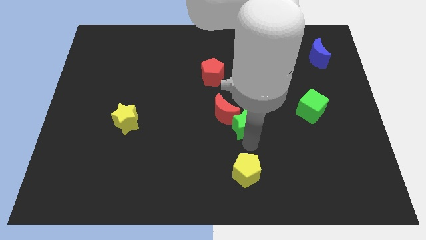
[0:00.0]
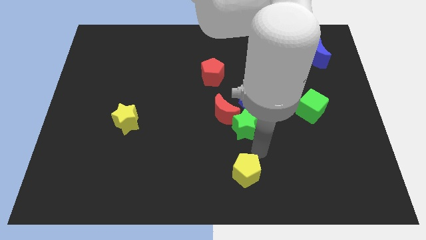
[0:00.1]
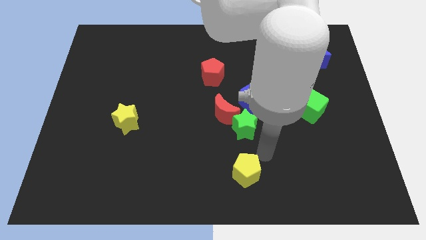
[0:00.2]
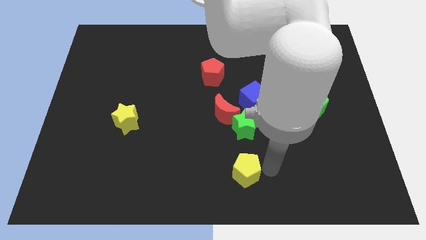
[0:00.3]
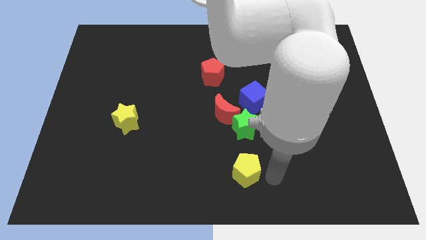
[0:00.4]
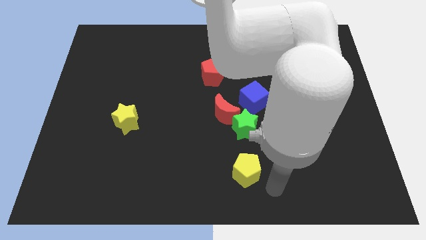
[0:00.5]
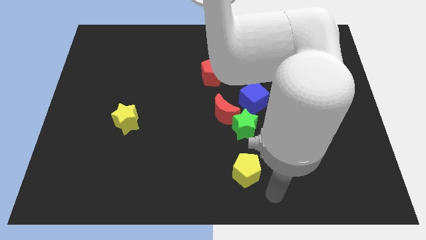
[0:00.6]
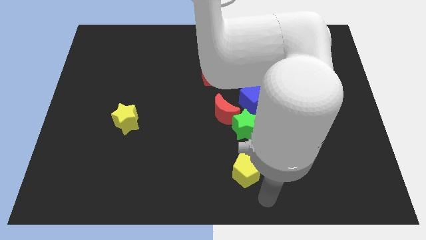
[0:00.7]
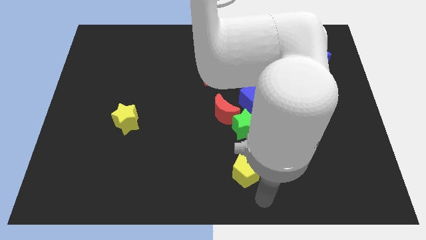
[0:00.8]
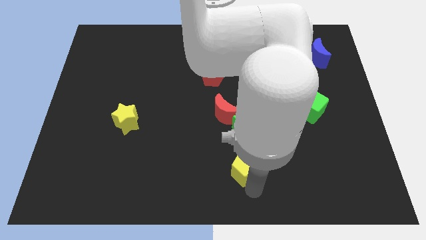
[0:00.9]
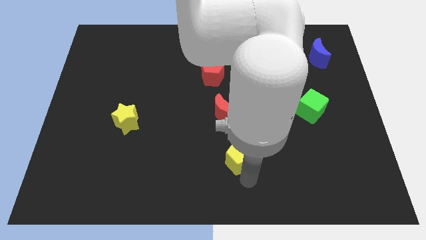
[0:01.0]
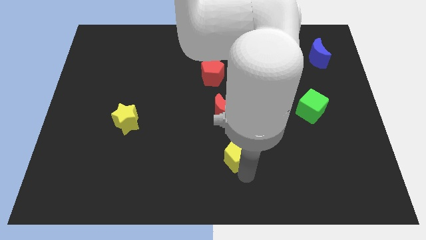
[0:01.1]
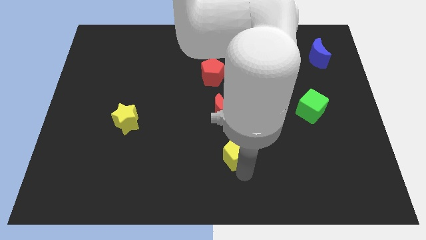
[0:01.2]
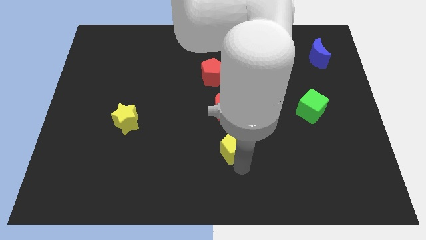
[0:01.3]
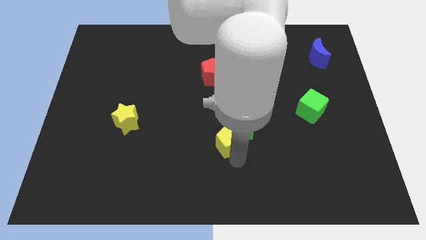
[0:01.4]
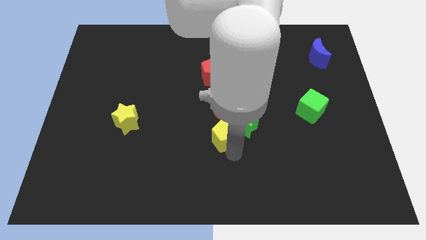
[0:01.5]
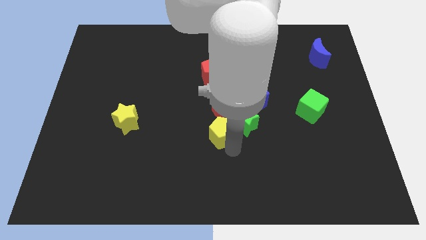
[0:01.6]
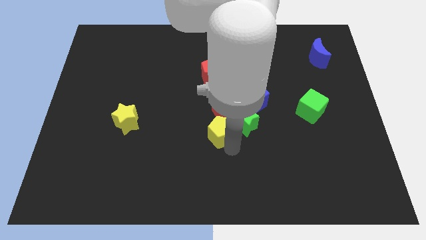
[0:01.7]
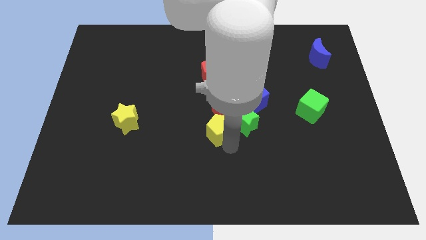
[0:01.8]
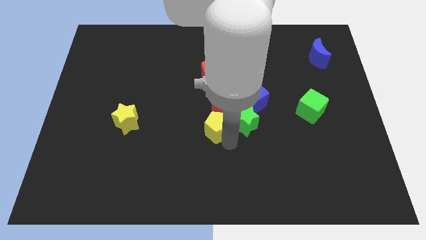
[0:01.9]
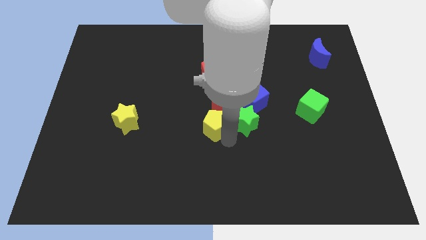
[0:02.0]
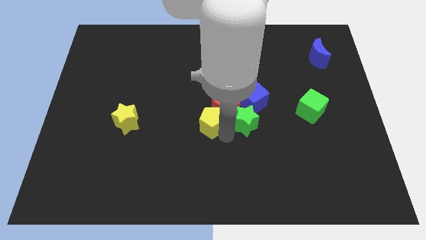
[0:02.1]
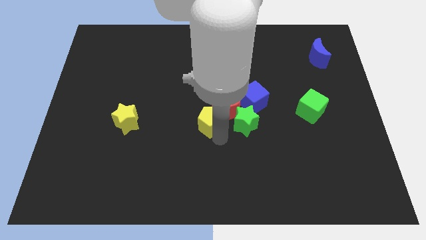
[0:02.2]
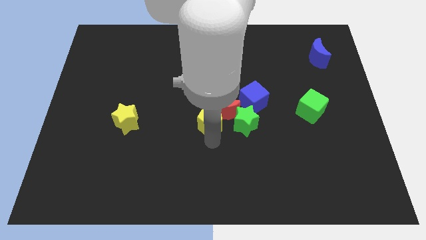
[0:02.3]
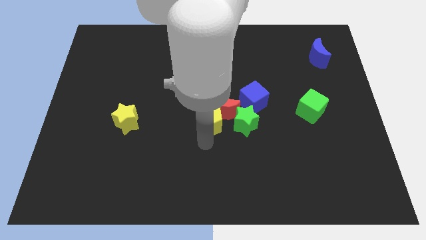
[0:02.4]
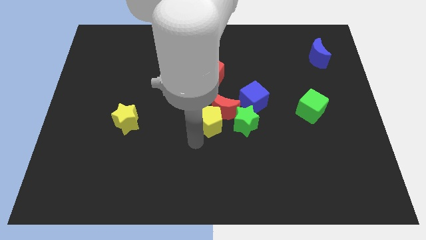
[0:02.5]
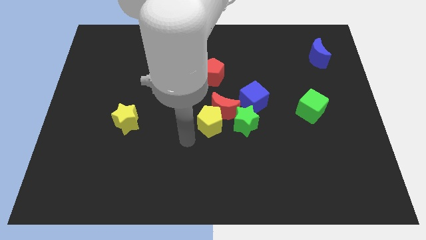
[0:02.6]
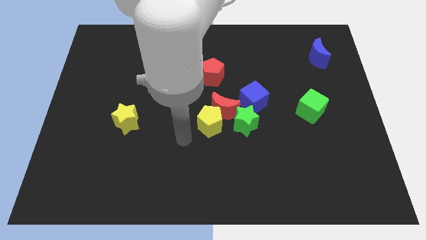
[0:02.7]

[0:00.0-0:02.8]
move the yellow pentagon to the left of the green star

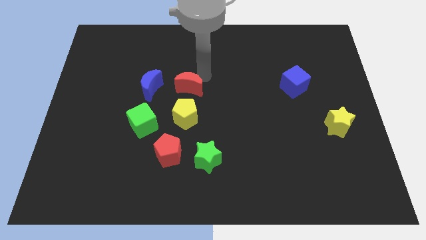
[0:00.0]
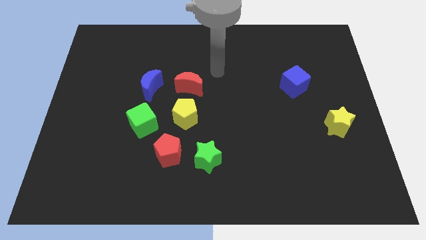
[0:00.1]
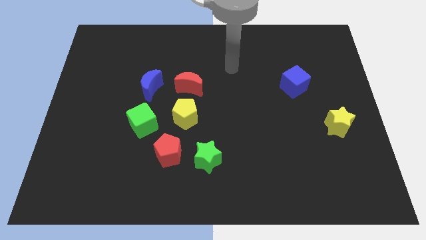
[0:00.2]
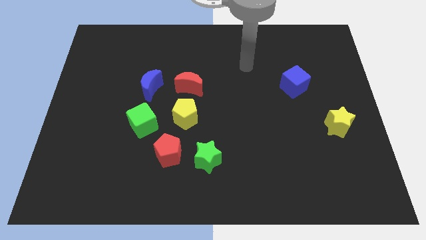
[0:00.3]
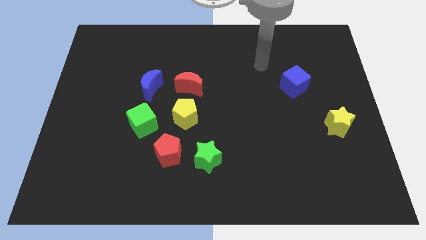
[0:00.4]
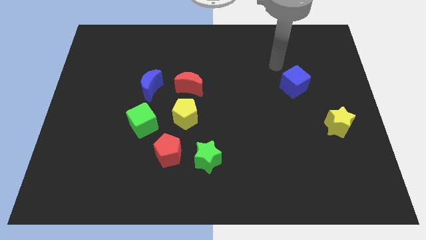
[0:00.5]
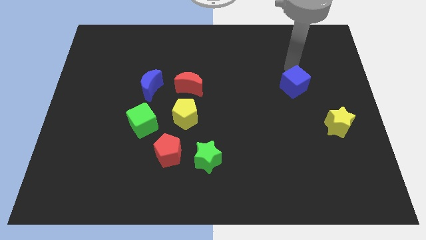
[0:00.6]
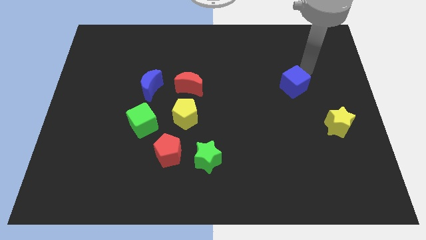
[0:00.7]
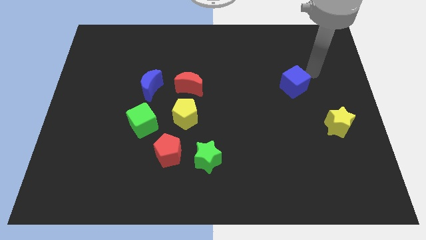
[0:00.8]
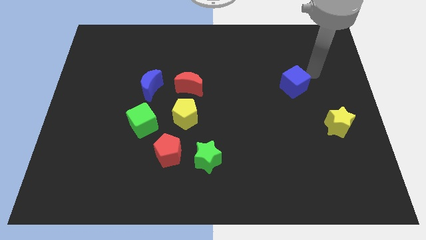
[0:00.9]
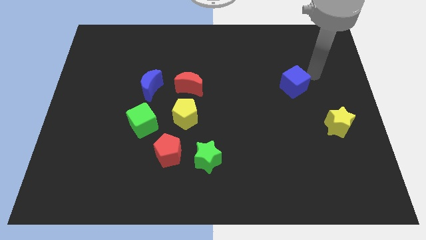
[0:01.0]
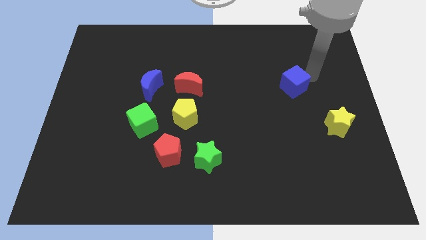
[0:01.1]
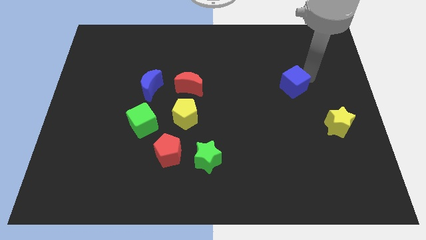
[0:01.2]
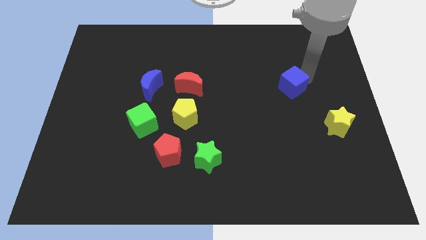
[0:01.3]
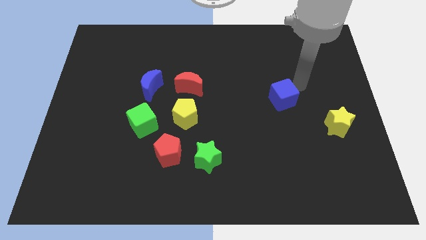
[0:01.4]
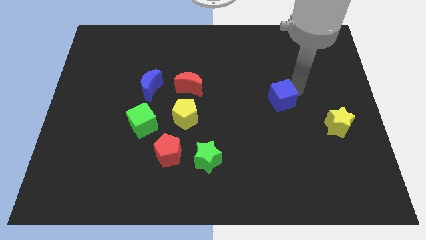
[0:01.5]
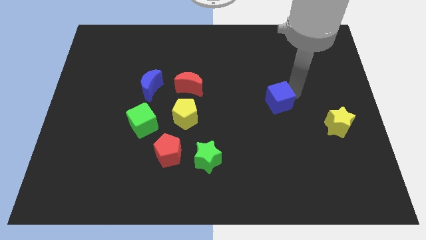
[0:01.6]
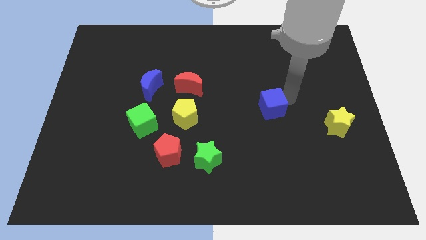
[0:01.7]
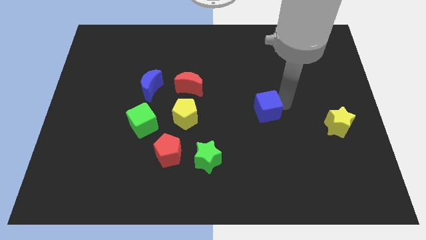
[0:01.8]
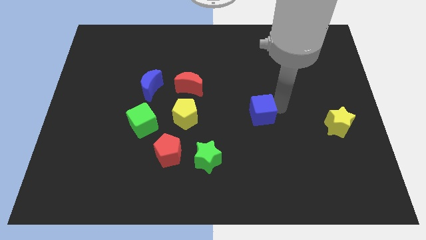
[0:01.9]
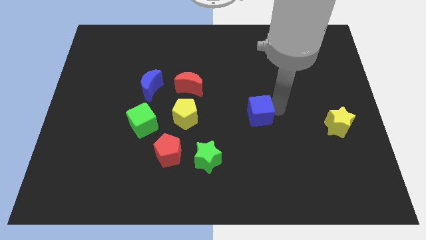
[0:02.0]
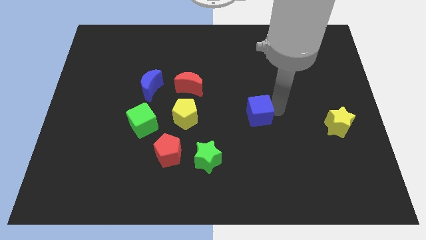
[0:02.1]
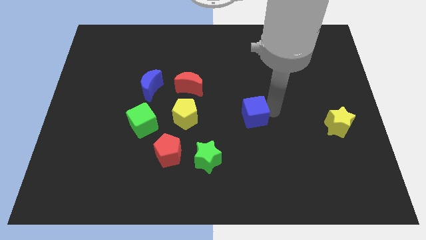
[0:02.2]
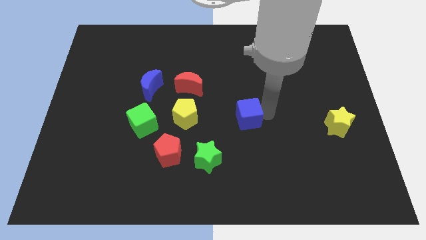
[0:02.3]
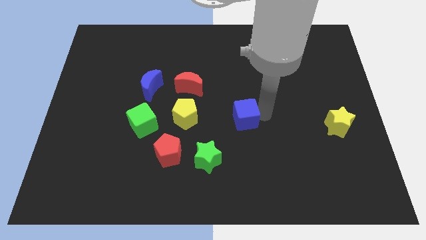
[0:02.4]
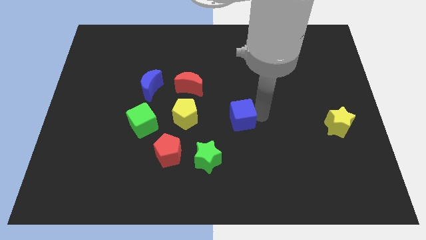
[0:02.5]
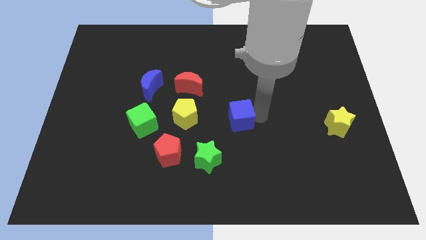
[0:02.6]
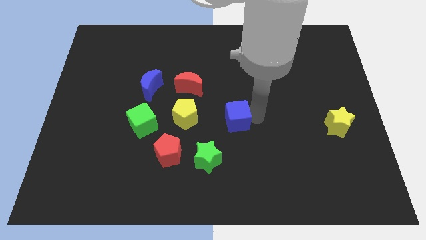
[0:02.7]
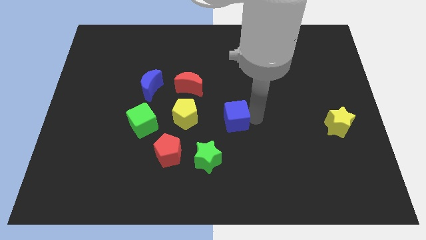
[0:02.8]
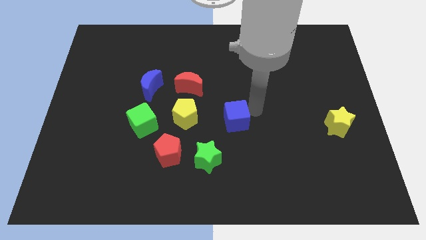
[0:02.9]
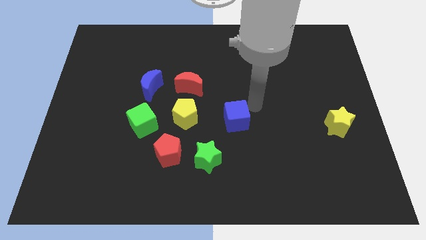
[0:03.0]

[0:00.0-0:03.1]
move the blue cube parallel yellow pentagon

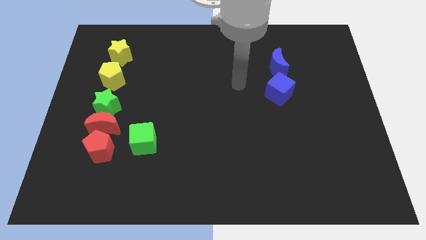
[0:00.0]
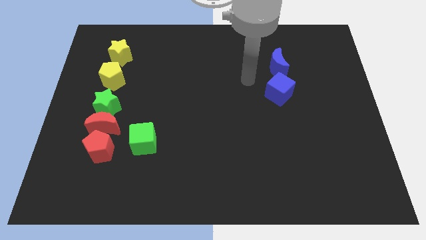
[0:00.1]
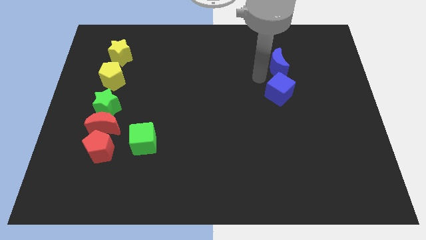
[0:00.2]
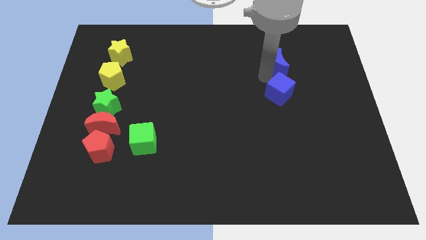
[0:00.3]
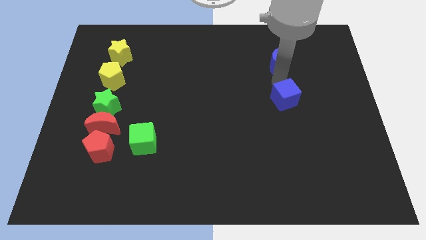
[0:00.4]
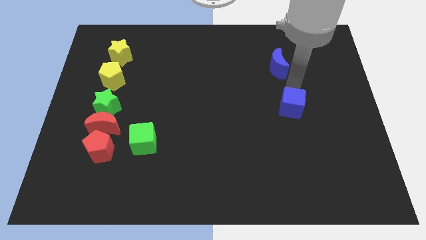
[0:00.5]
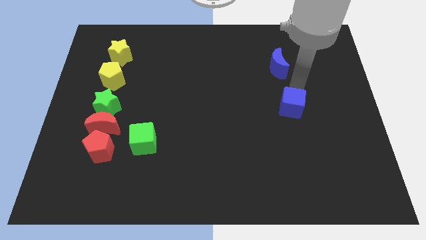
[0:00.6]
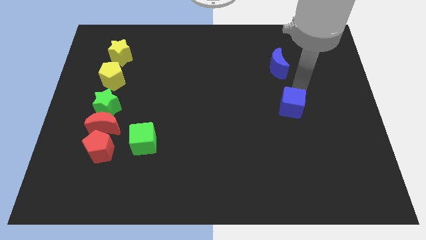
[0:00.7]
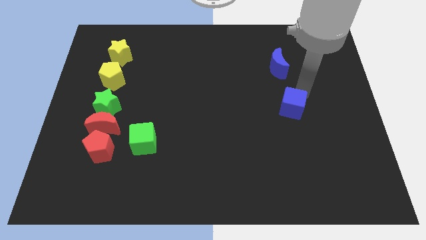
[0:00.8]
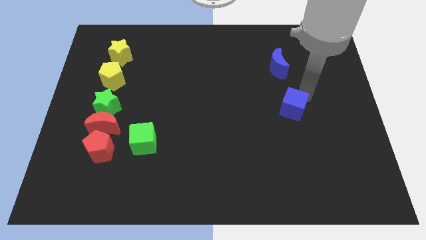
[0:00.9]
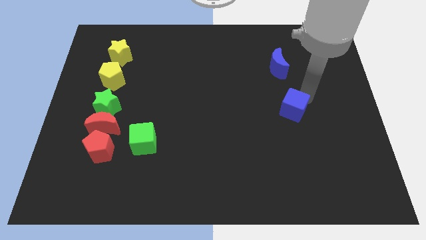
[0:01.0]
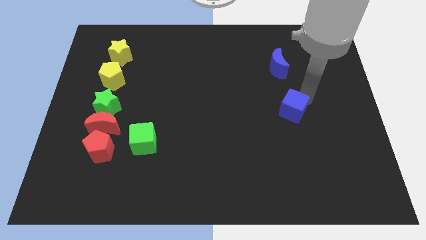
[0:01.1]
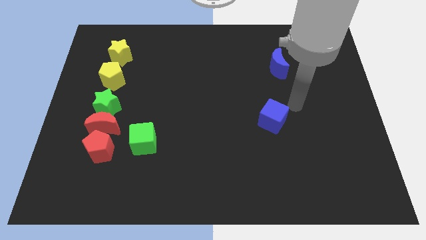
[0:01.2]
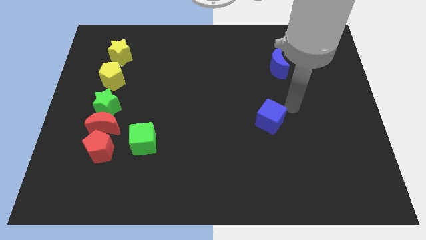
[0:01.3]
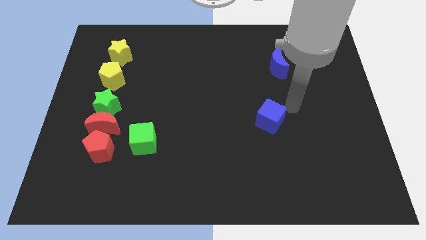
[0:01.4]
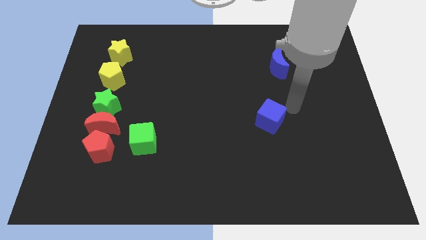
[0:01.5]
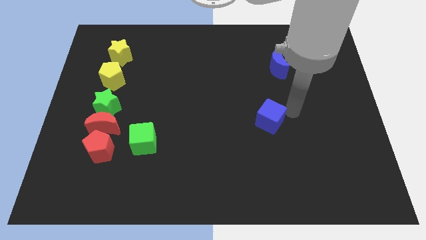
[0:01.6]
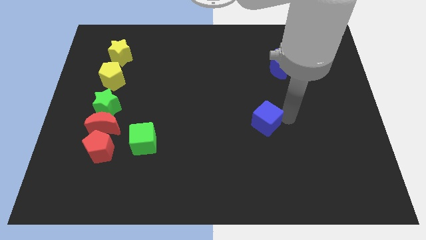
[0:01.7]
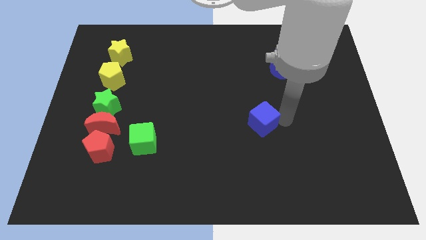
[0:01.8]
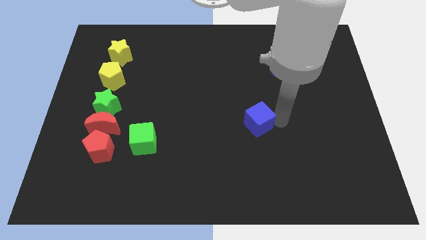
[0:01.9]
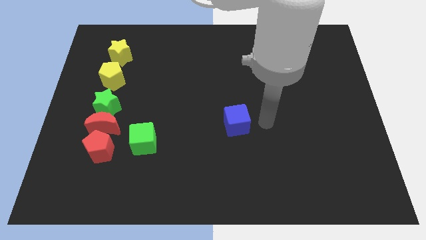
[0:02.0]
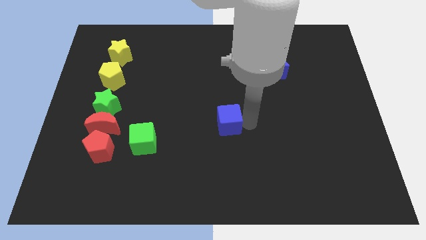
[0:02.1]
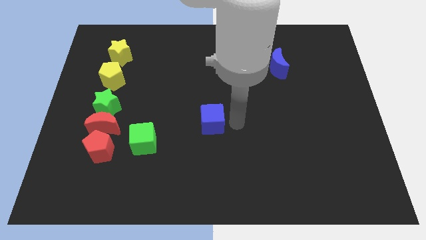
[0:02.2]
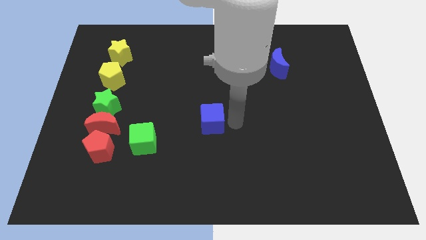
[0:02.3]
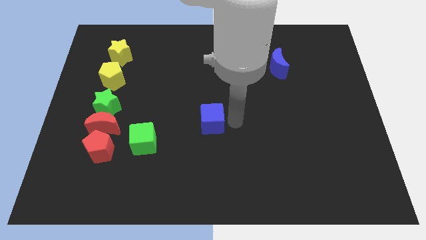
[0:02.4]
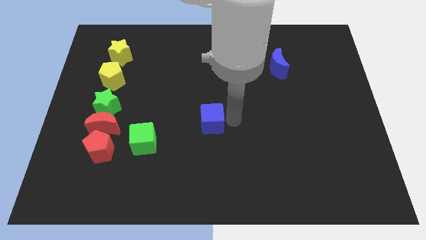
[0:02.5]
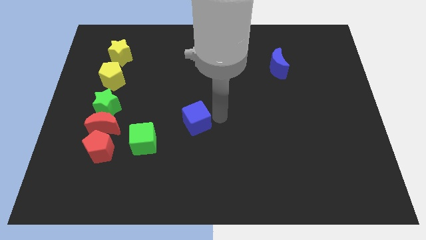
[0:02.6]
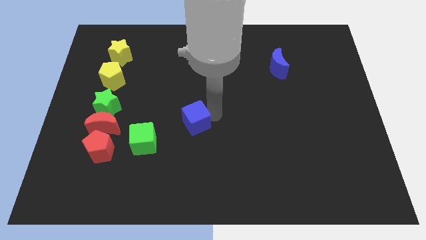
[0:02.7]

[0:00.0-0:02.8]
slide the blue cube towards the left

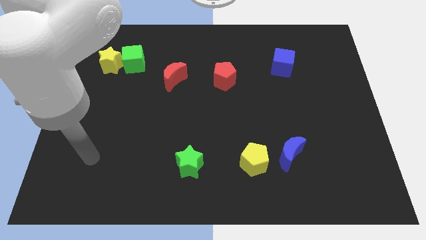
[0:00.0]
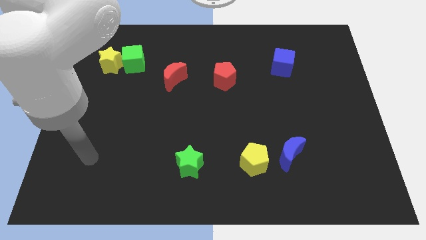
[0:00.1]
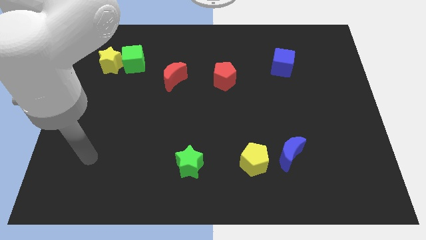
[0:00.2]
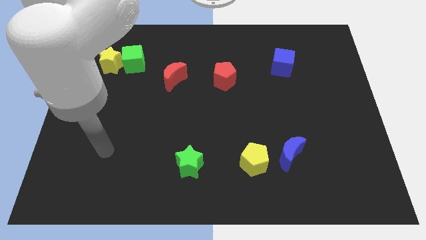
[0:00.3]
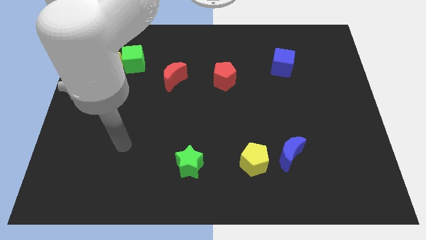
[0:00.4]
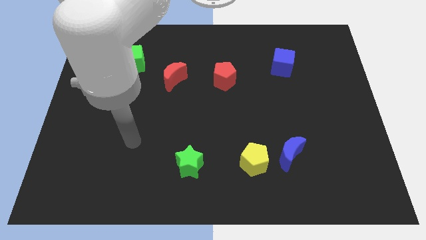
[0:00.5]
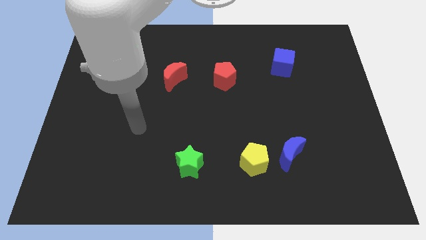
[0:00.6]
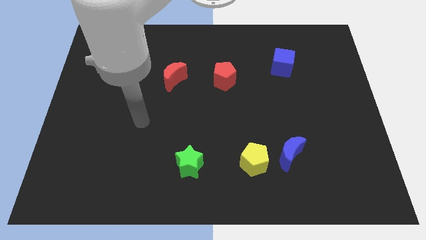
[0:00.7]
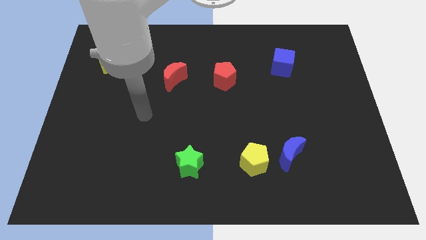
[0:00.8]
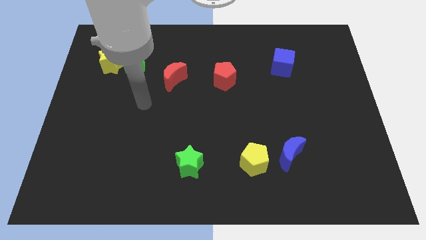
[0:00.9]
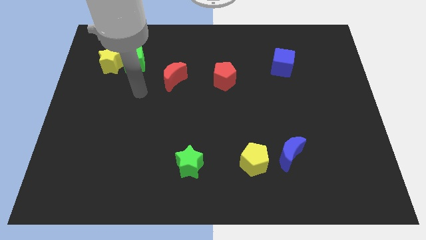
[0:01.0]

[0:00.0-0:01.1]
slide your arm below the green cube
